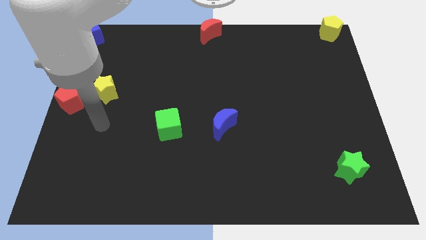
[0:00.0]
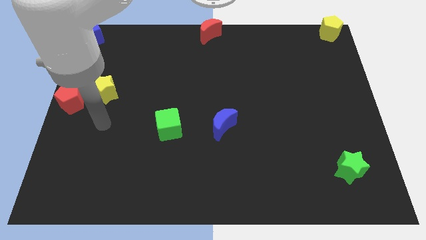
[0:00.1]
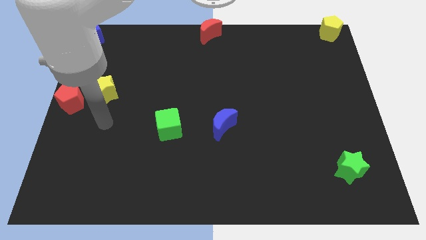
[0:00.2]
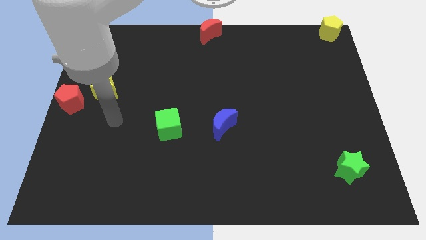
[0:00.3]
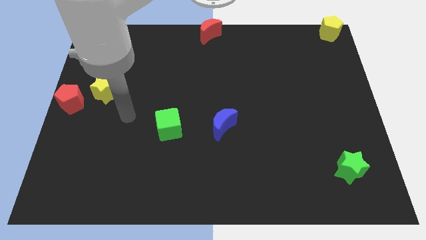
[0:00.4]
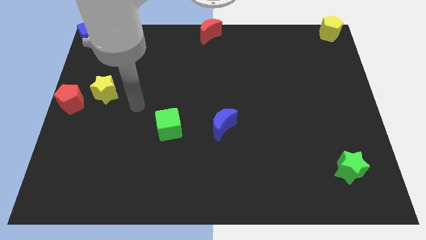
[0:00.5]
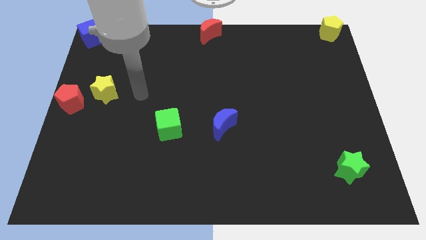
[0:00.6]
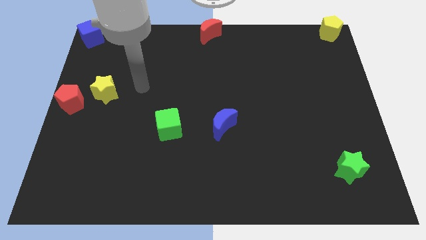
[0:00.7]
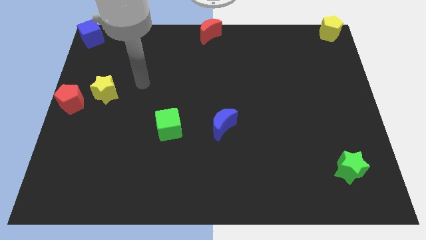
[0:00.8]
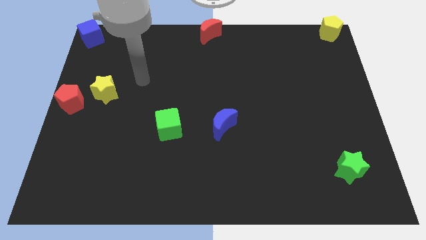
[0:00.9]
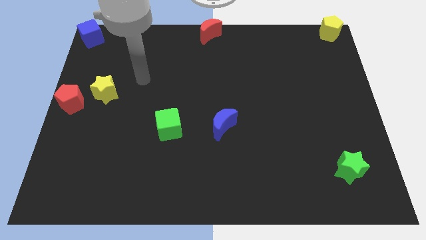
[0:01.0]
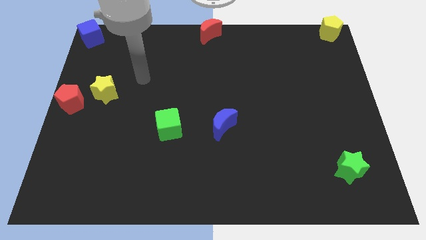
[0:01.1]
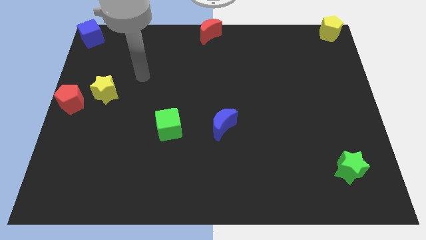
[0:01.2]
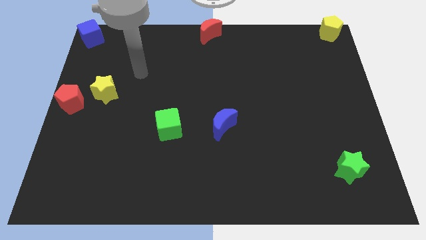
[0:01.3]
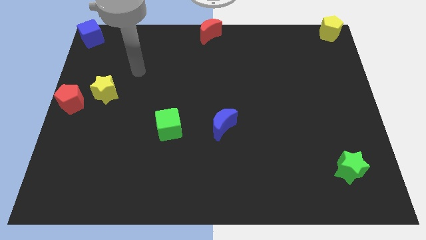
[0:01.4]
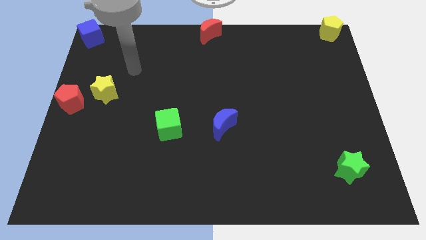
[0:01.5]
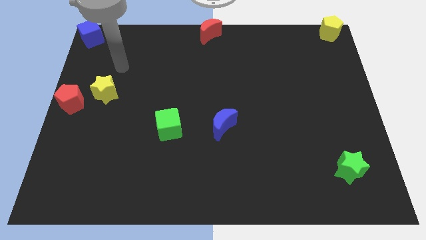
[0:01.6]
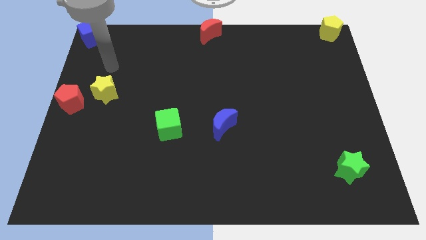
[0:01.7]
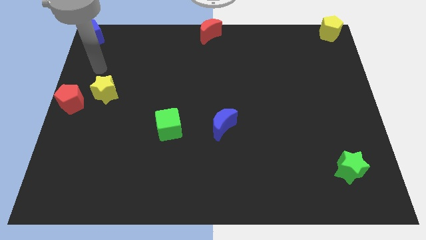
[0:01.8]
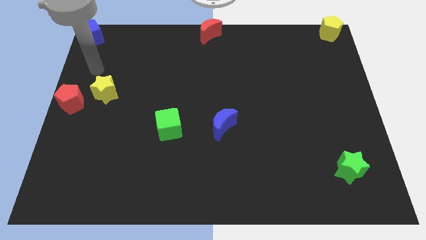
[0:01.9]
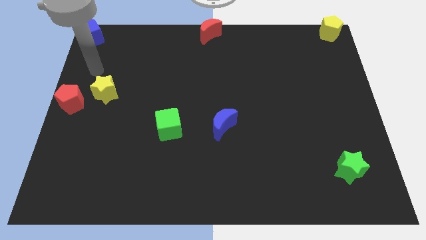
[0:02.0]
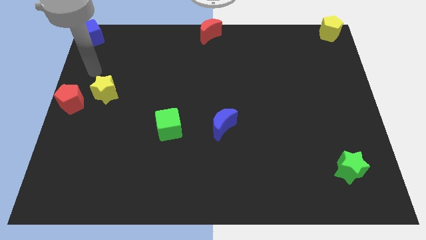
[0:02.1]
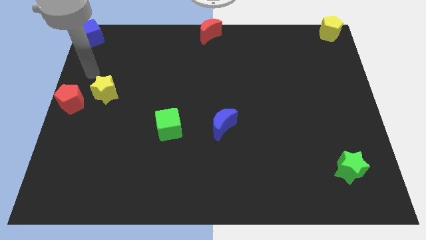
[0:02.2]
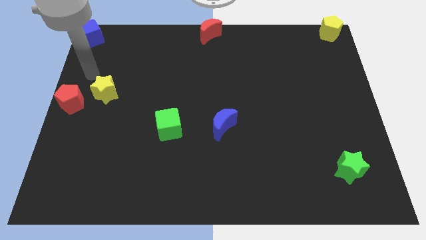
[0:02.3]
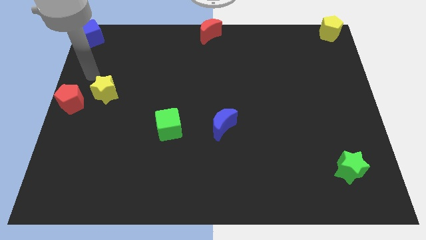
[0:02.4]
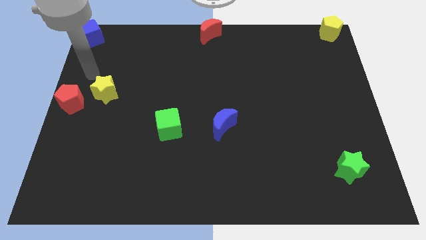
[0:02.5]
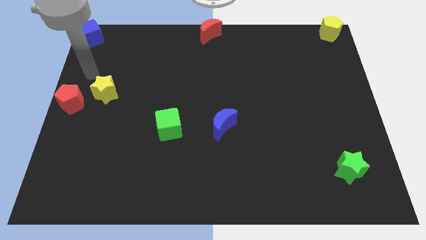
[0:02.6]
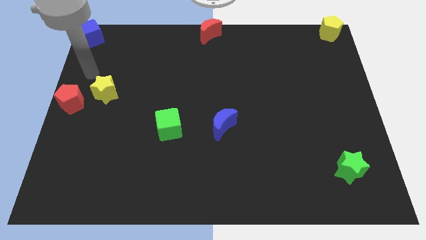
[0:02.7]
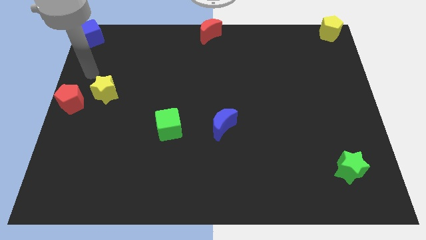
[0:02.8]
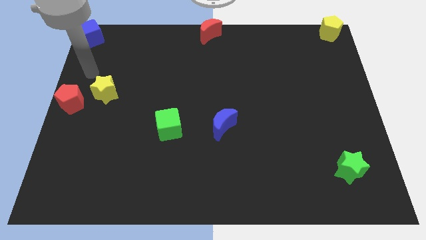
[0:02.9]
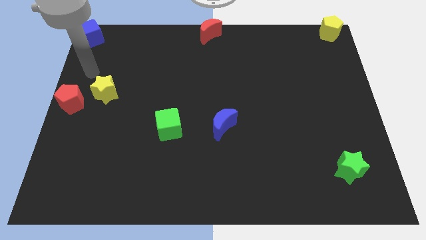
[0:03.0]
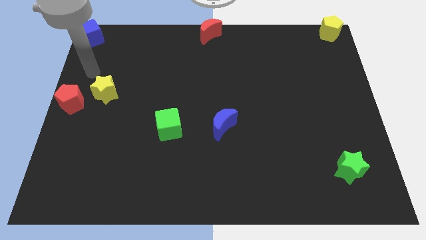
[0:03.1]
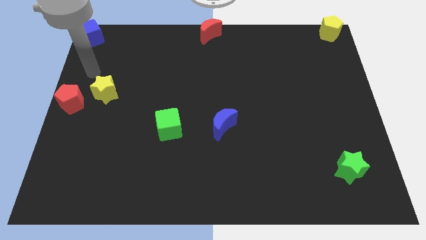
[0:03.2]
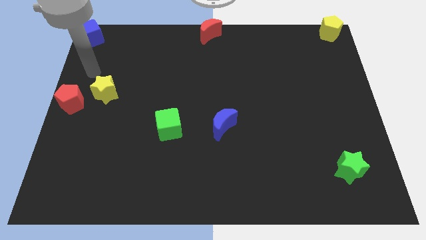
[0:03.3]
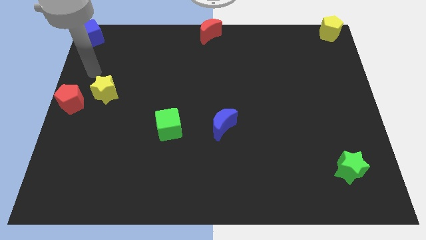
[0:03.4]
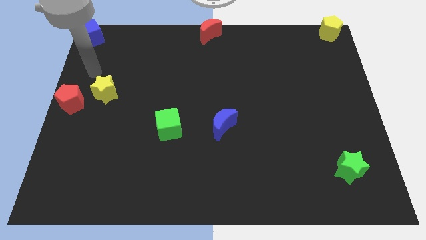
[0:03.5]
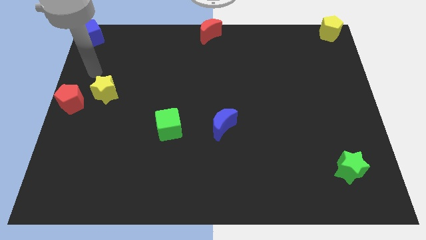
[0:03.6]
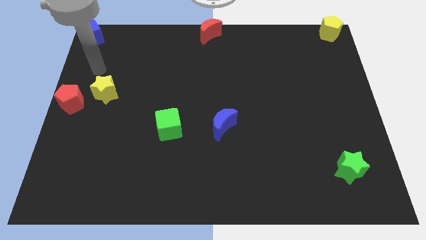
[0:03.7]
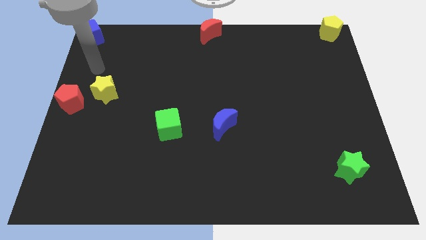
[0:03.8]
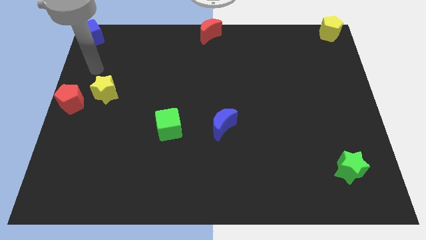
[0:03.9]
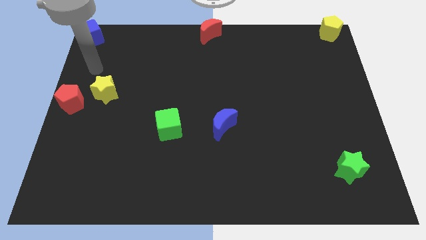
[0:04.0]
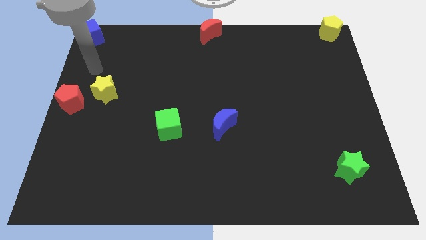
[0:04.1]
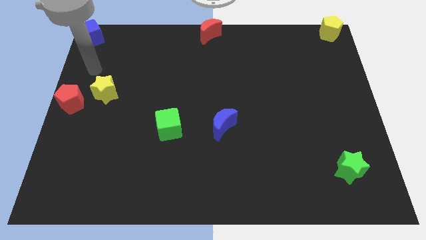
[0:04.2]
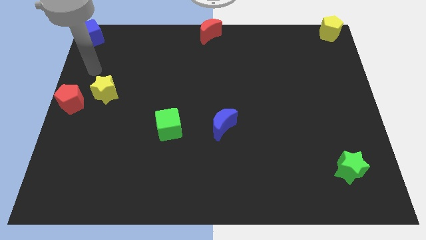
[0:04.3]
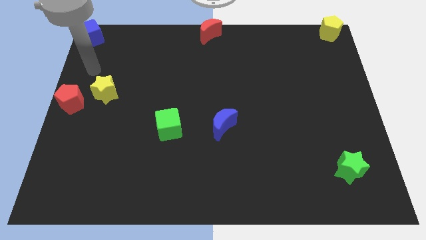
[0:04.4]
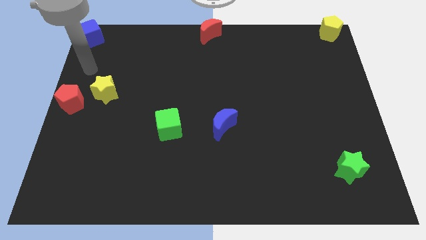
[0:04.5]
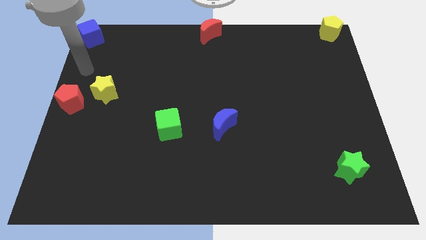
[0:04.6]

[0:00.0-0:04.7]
move your arm below the blue cube

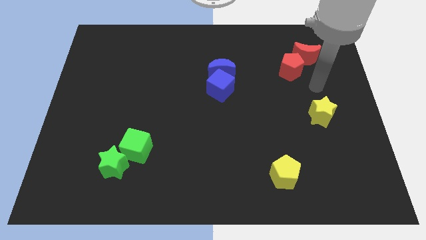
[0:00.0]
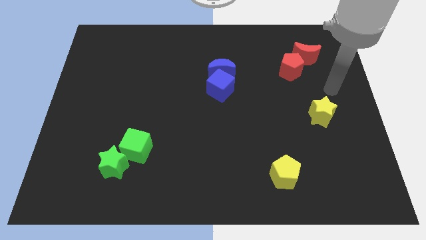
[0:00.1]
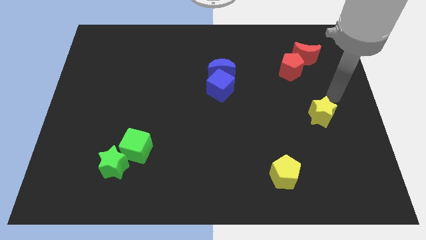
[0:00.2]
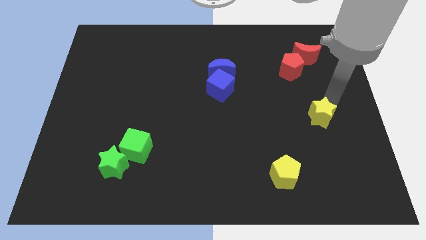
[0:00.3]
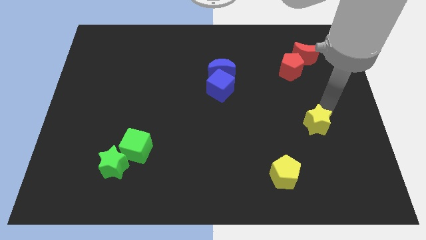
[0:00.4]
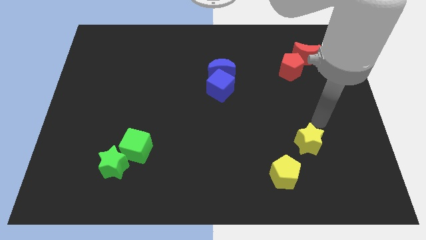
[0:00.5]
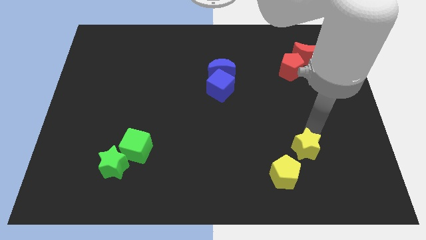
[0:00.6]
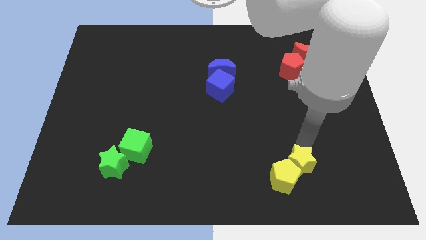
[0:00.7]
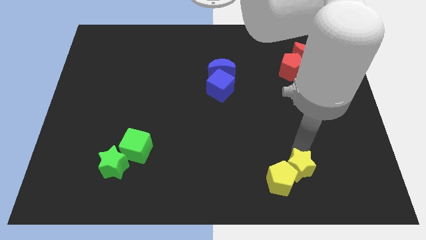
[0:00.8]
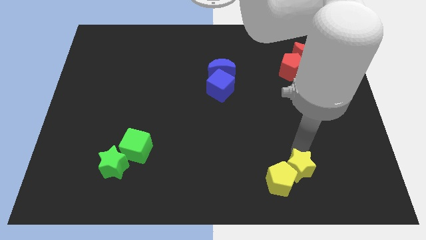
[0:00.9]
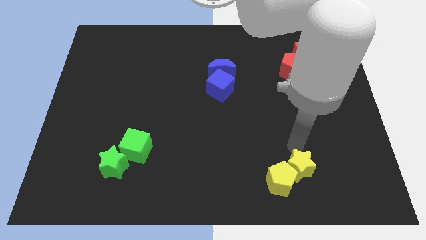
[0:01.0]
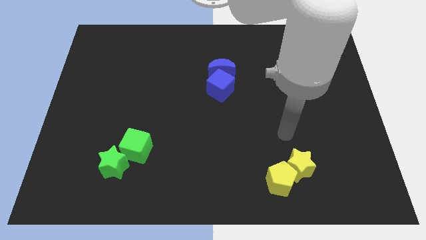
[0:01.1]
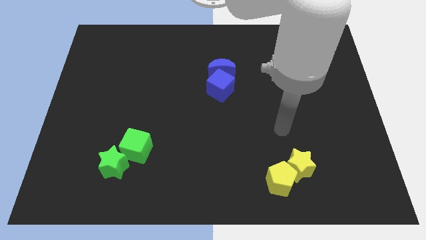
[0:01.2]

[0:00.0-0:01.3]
push the yellow blocks together

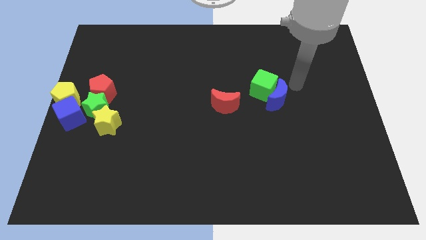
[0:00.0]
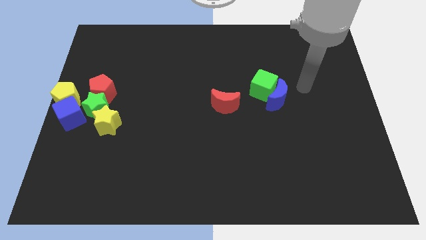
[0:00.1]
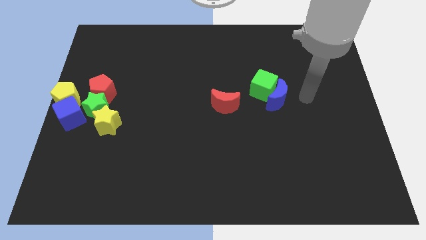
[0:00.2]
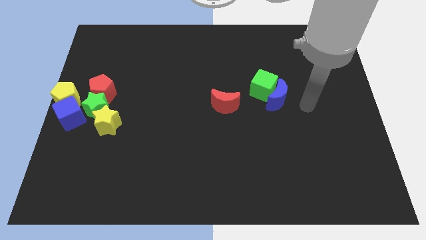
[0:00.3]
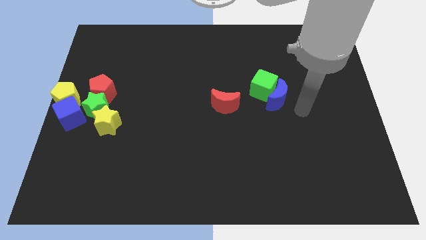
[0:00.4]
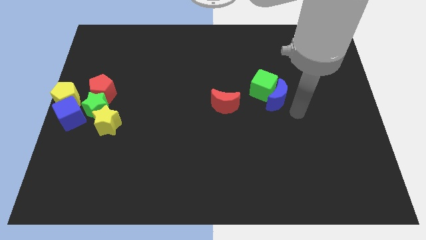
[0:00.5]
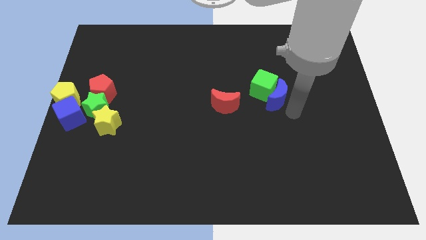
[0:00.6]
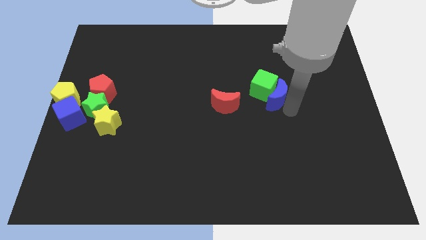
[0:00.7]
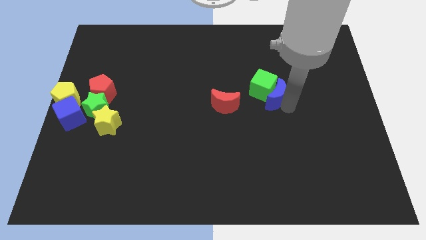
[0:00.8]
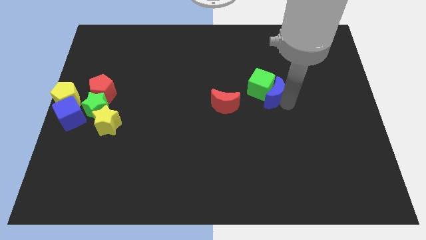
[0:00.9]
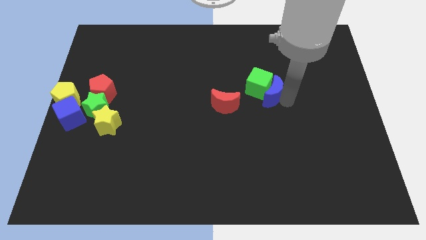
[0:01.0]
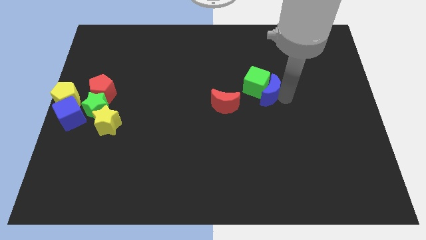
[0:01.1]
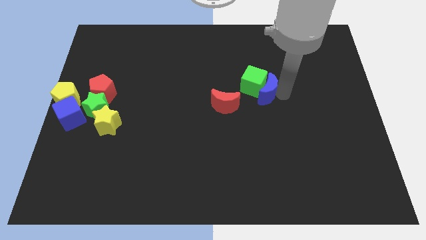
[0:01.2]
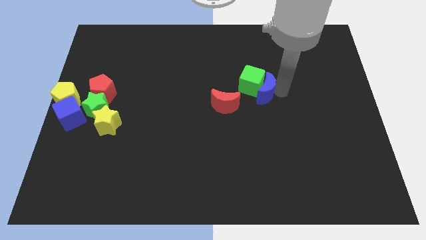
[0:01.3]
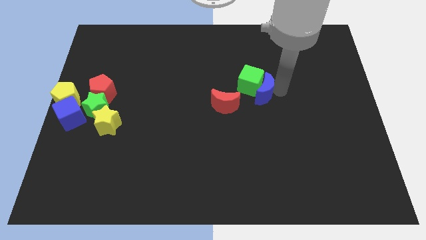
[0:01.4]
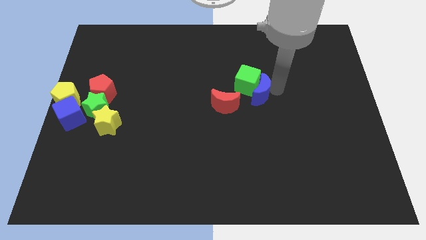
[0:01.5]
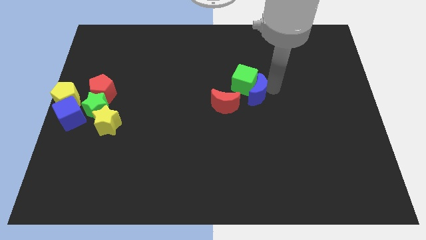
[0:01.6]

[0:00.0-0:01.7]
push the blue crescent and green cube to the top of red crescent

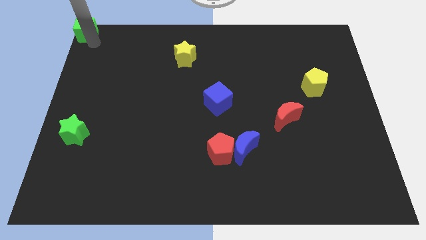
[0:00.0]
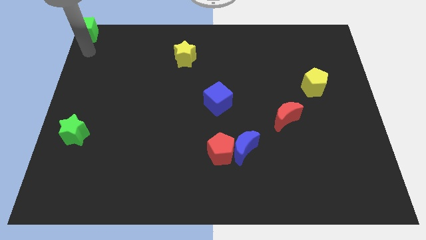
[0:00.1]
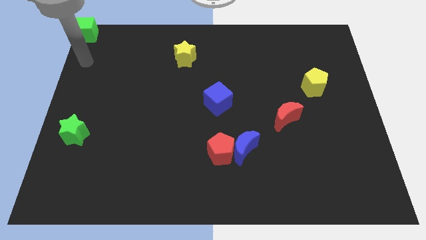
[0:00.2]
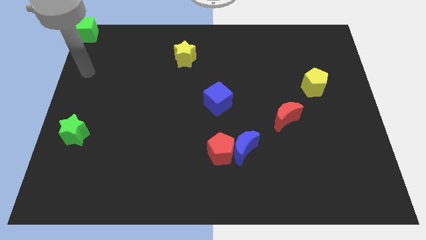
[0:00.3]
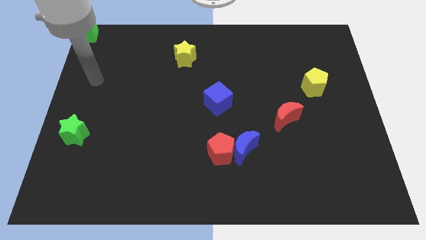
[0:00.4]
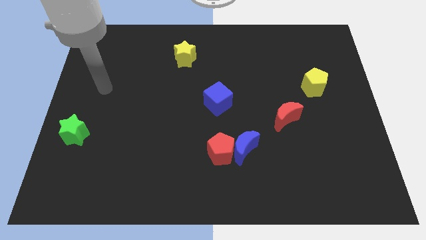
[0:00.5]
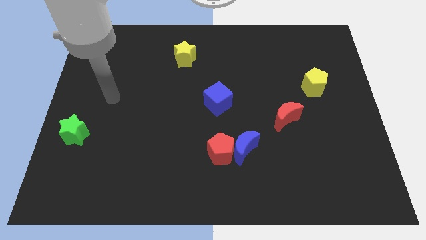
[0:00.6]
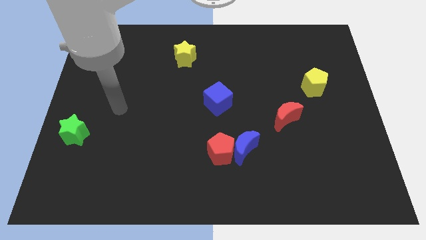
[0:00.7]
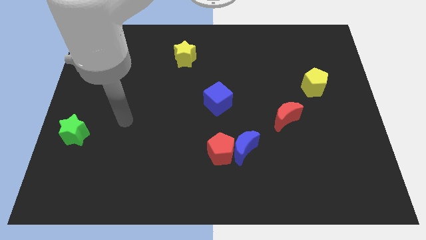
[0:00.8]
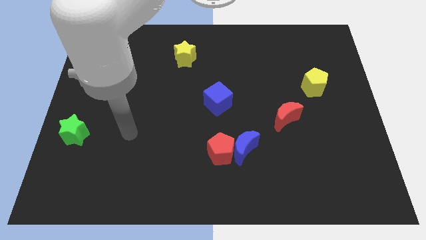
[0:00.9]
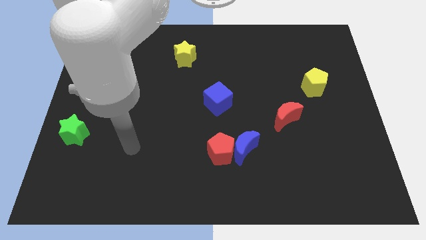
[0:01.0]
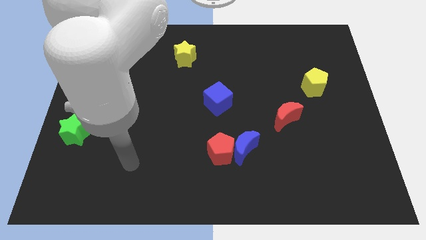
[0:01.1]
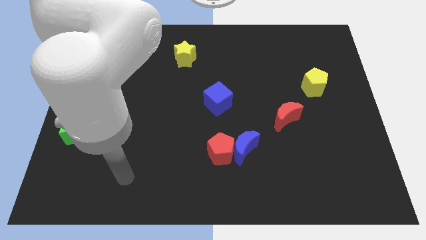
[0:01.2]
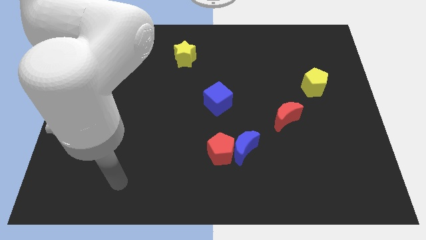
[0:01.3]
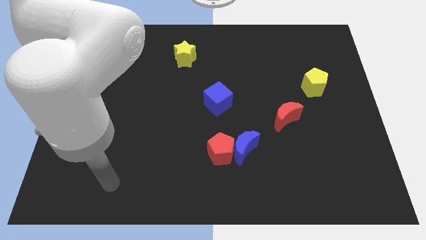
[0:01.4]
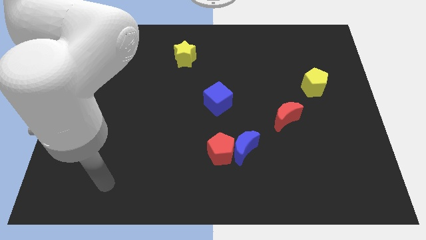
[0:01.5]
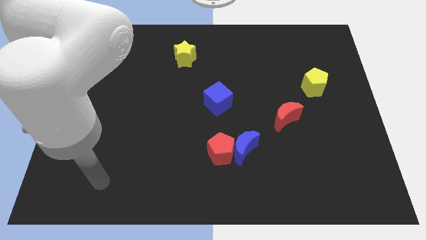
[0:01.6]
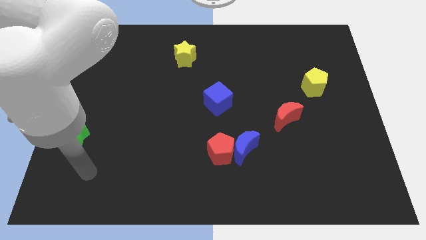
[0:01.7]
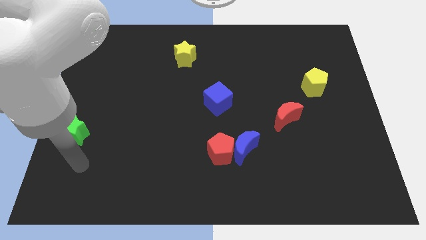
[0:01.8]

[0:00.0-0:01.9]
move your arm away from the green cube
